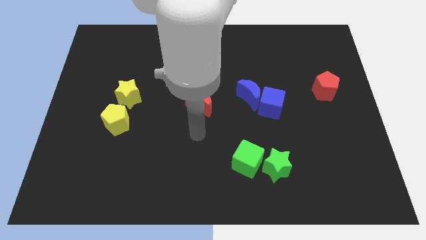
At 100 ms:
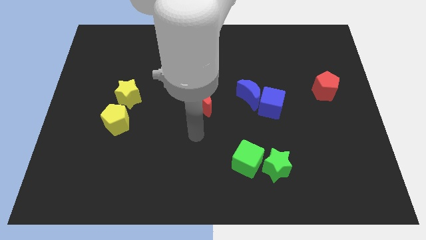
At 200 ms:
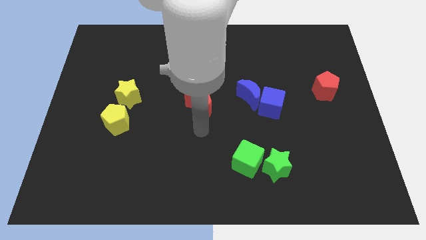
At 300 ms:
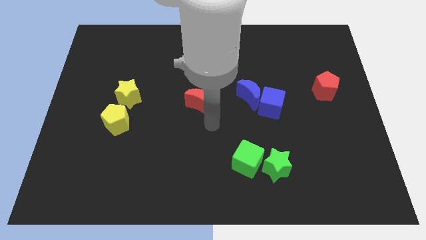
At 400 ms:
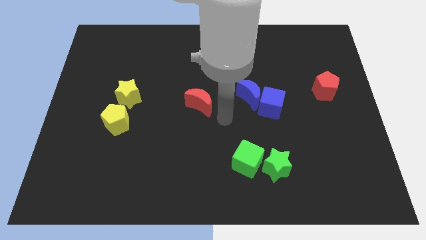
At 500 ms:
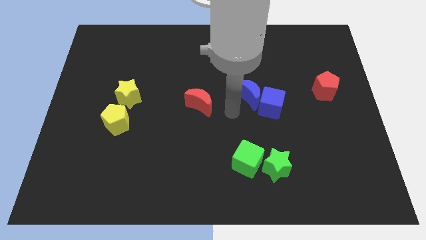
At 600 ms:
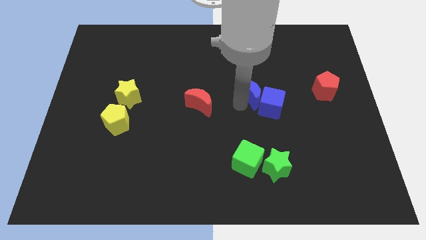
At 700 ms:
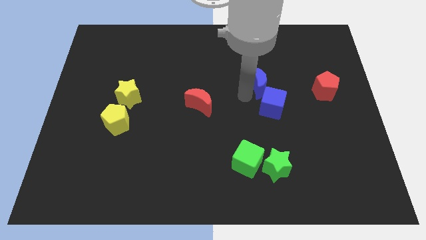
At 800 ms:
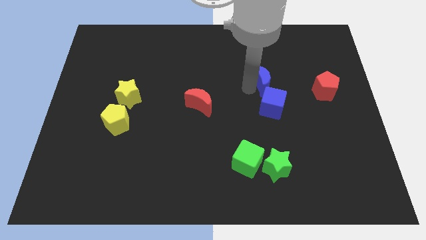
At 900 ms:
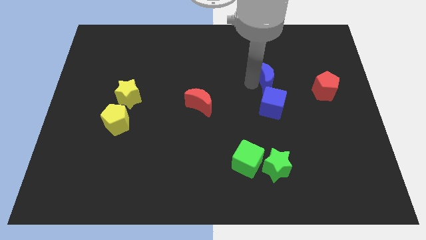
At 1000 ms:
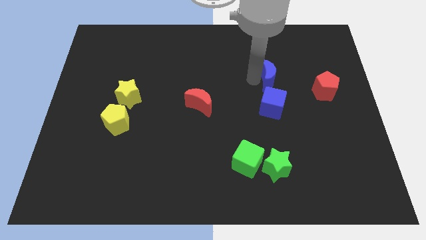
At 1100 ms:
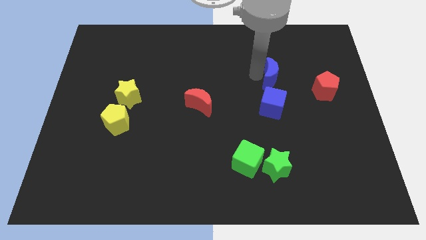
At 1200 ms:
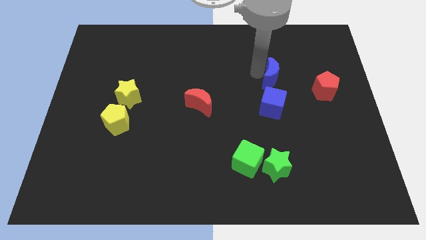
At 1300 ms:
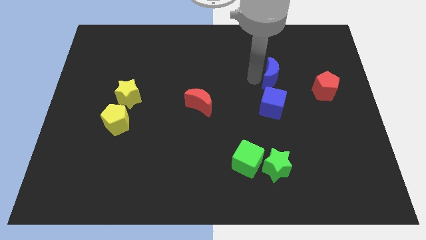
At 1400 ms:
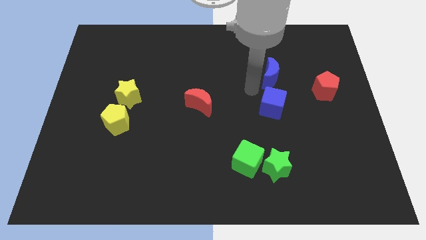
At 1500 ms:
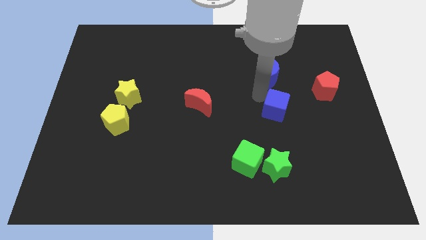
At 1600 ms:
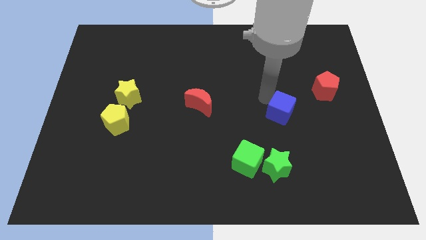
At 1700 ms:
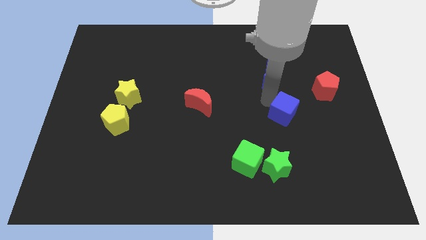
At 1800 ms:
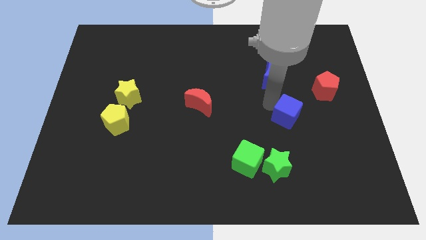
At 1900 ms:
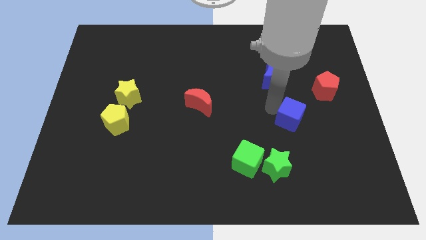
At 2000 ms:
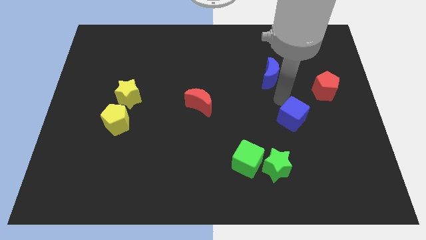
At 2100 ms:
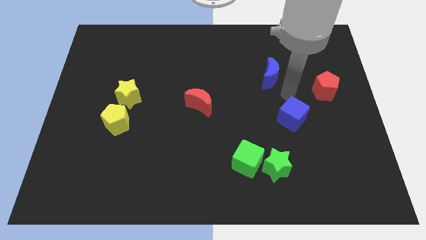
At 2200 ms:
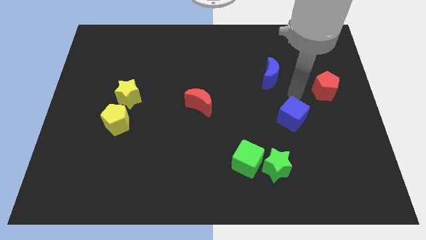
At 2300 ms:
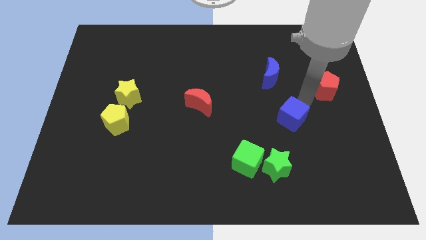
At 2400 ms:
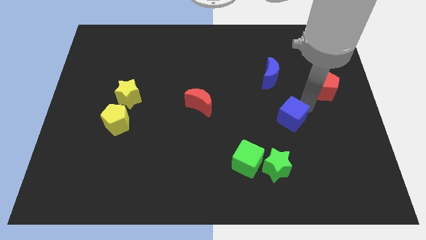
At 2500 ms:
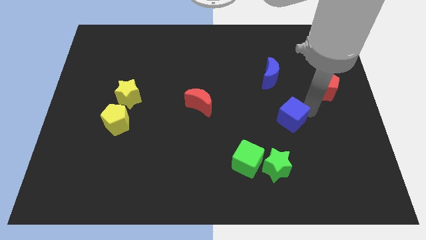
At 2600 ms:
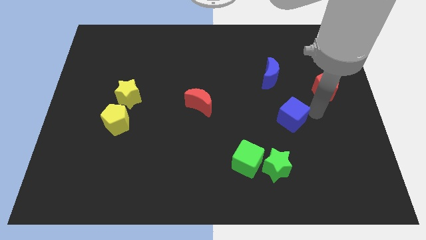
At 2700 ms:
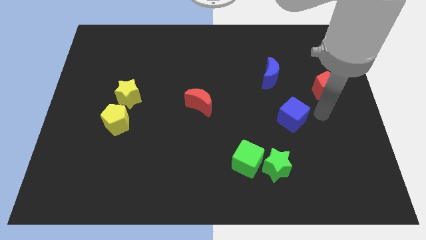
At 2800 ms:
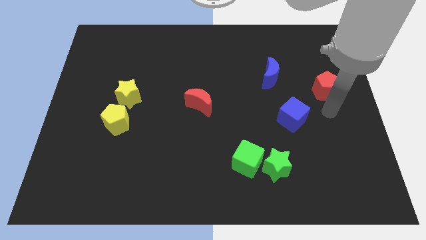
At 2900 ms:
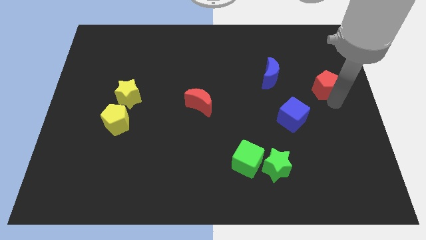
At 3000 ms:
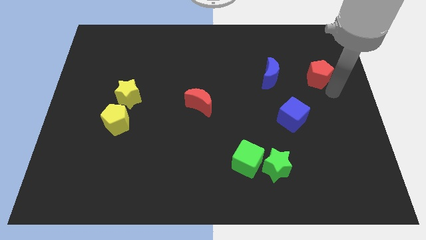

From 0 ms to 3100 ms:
make a triangle with the blue blocks and red moon at the right side of the table

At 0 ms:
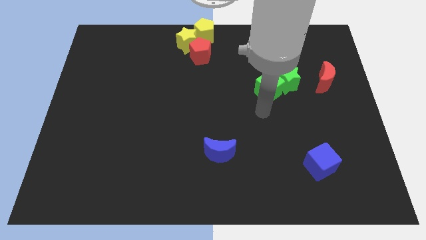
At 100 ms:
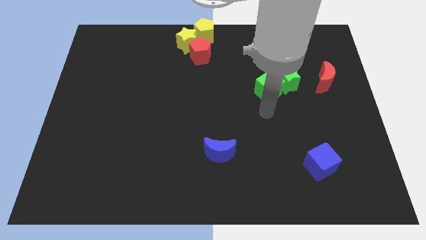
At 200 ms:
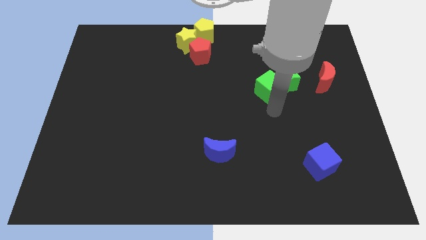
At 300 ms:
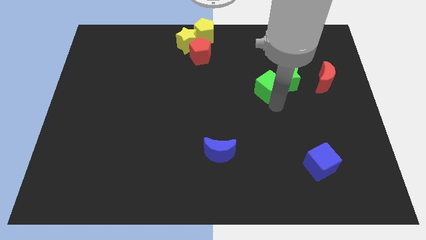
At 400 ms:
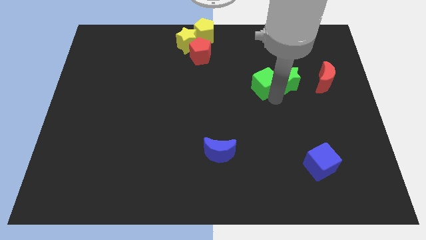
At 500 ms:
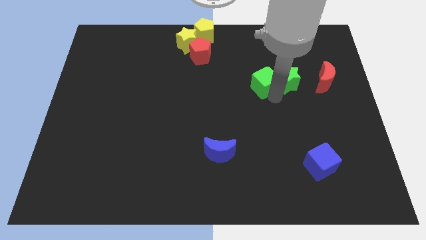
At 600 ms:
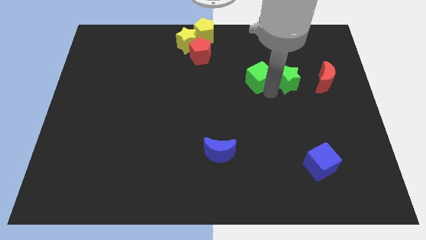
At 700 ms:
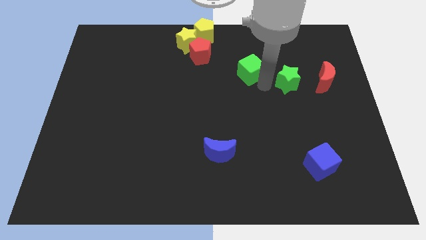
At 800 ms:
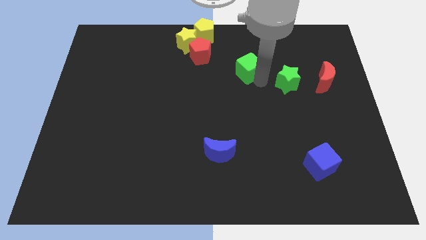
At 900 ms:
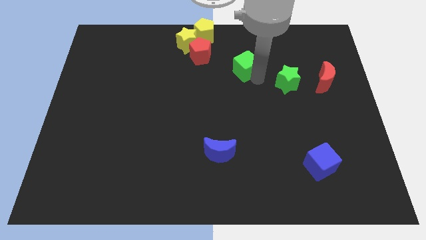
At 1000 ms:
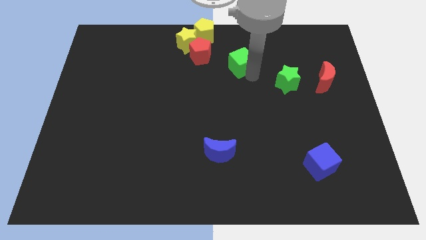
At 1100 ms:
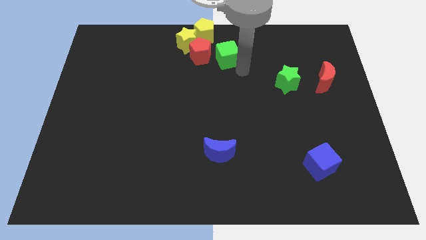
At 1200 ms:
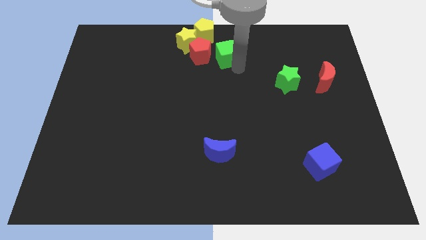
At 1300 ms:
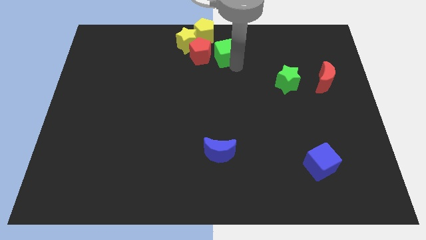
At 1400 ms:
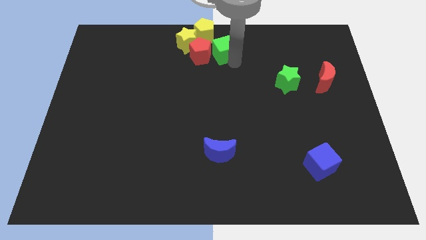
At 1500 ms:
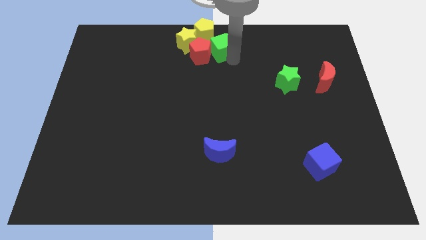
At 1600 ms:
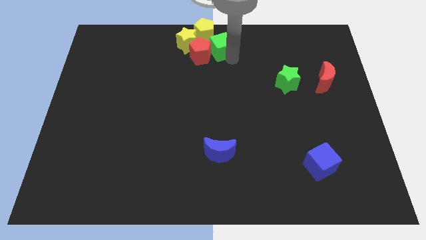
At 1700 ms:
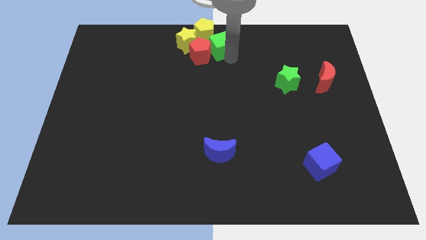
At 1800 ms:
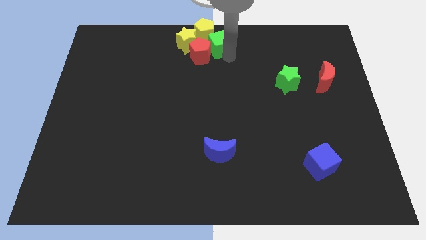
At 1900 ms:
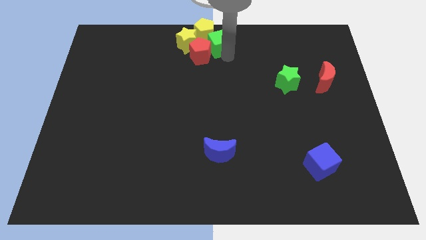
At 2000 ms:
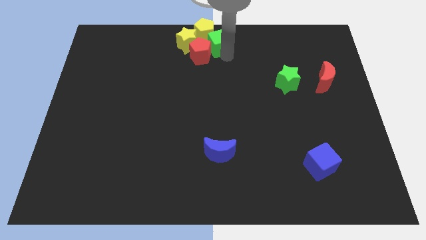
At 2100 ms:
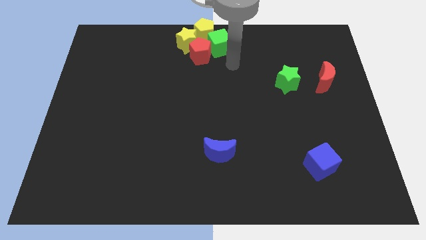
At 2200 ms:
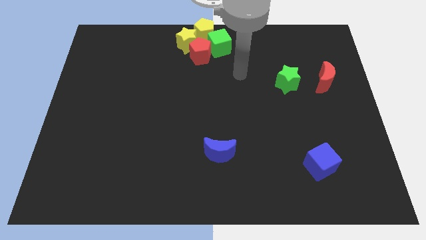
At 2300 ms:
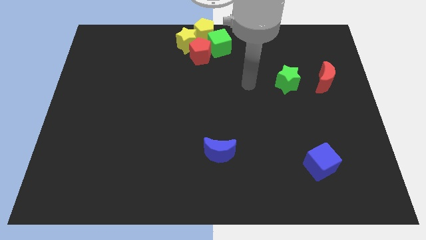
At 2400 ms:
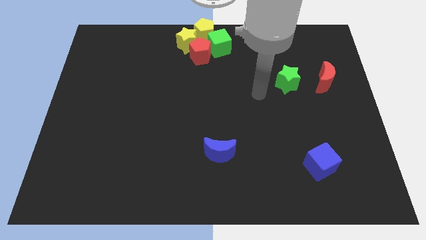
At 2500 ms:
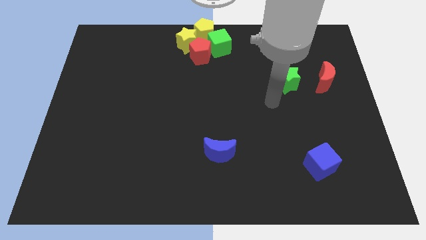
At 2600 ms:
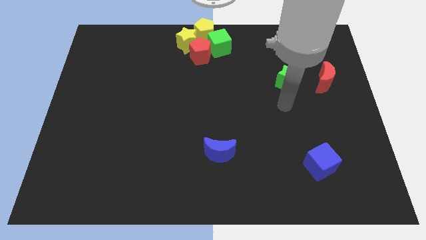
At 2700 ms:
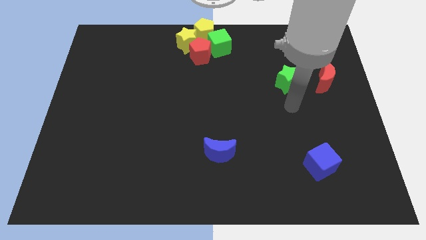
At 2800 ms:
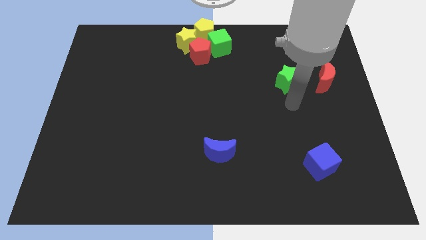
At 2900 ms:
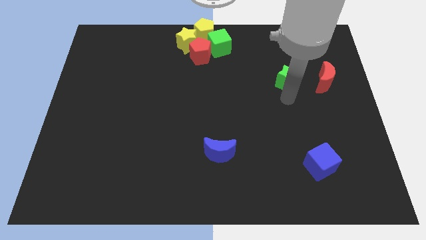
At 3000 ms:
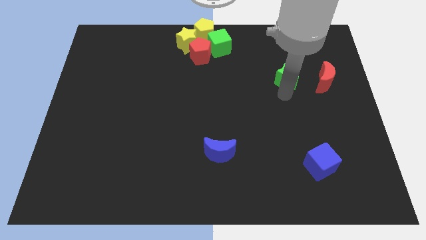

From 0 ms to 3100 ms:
push green star parallel left to red moon

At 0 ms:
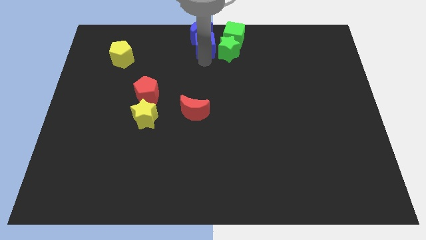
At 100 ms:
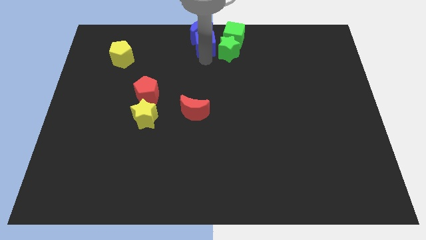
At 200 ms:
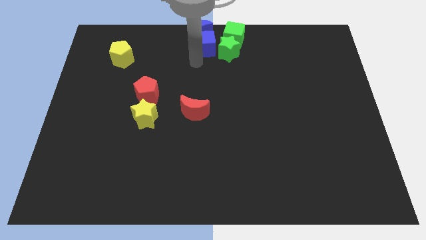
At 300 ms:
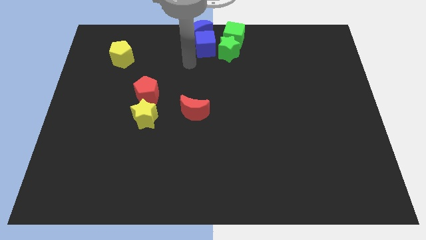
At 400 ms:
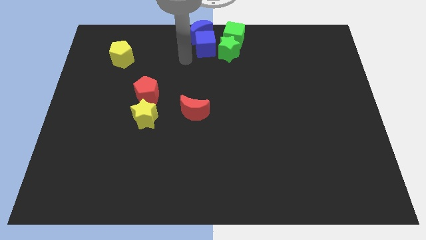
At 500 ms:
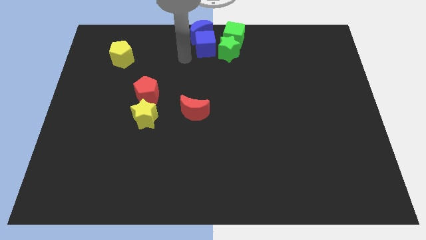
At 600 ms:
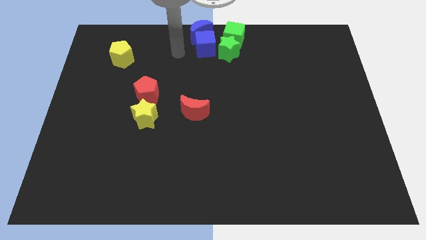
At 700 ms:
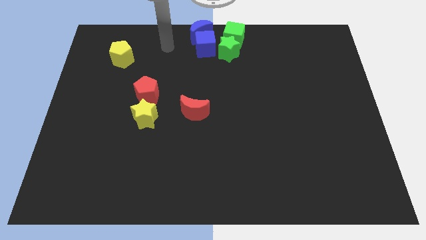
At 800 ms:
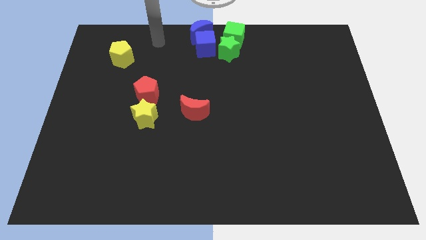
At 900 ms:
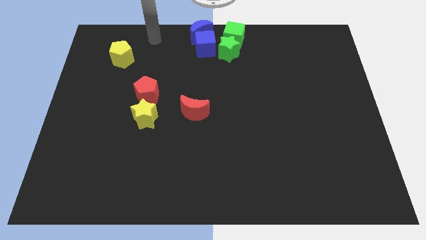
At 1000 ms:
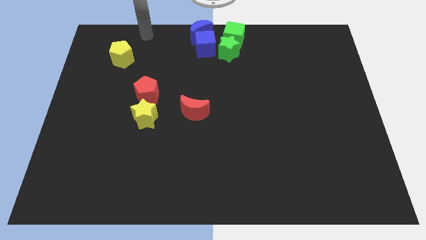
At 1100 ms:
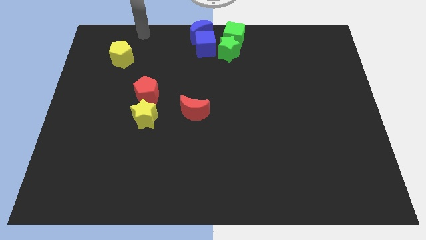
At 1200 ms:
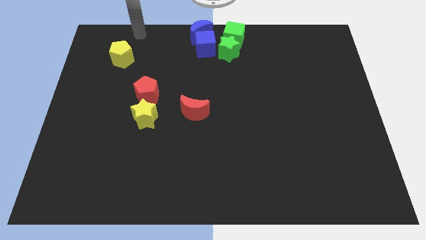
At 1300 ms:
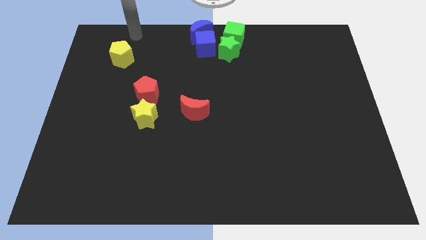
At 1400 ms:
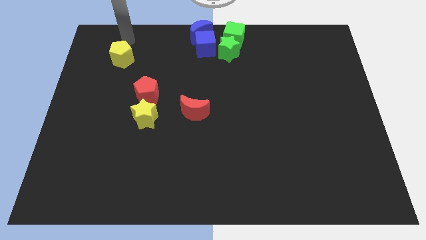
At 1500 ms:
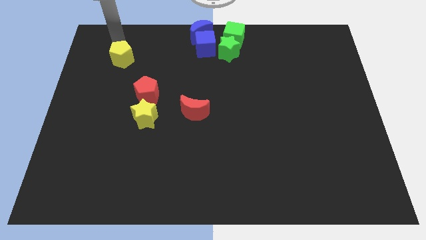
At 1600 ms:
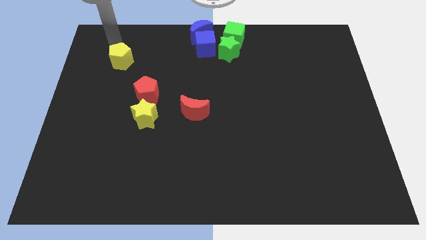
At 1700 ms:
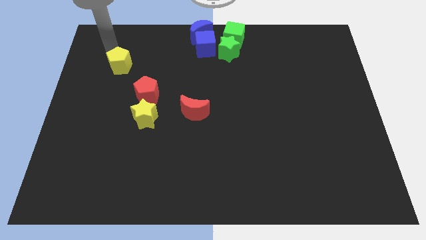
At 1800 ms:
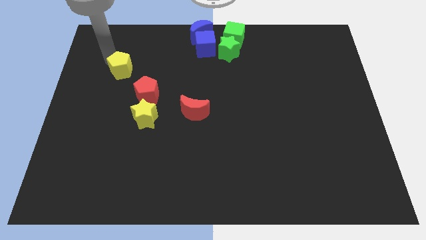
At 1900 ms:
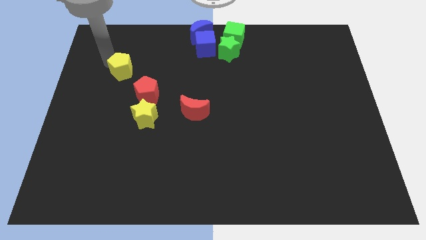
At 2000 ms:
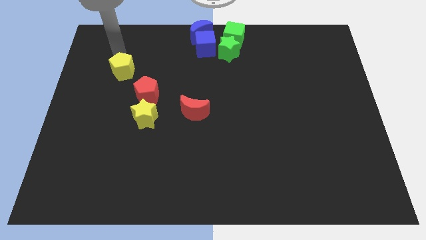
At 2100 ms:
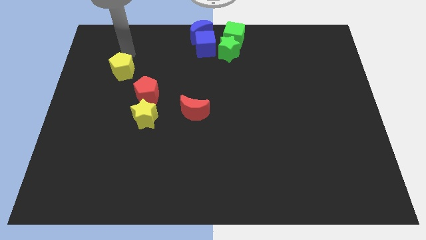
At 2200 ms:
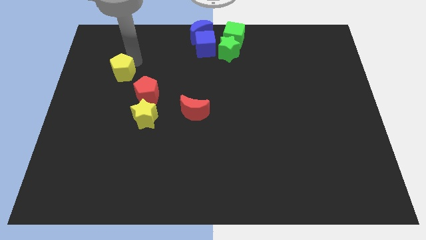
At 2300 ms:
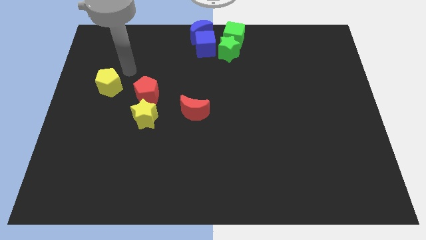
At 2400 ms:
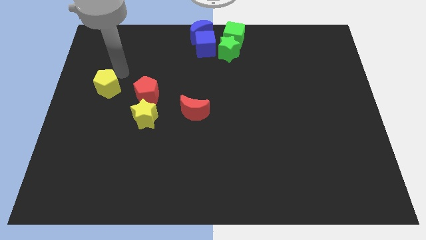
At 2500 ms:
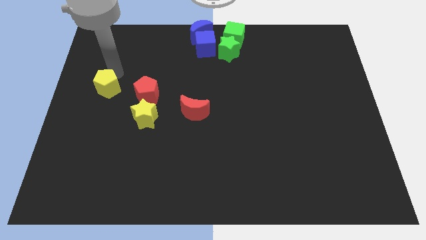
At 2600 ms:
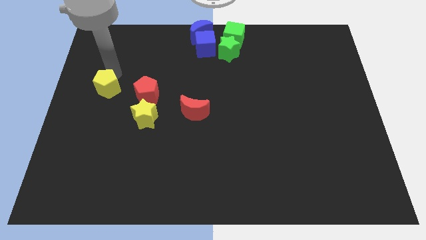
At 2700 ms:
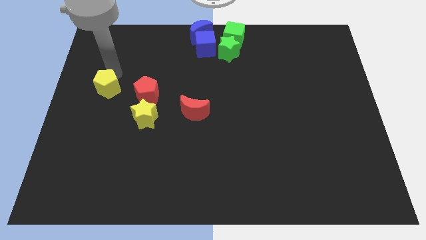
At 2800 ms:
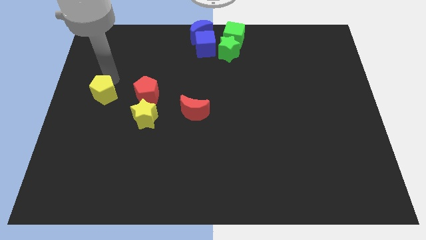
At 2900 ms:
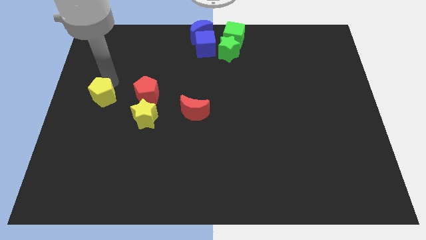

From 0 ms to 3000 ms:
move the yellow pentagon left to the red pentagon
